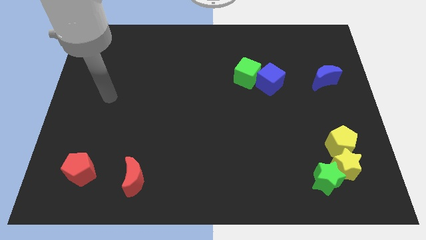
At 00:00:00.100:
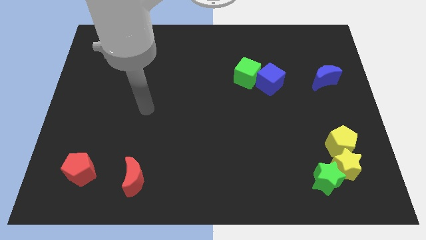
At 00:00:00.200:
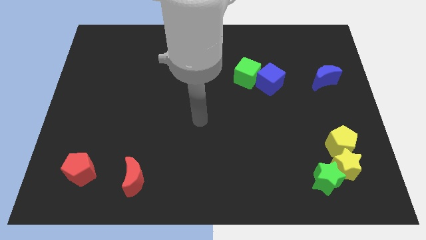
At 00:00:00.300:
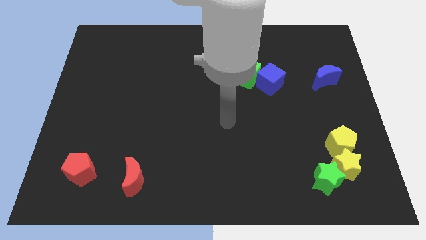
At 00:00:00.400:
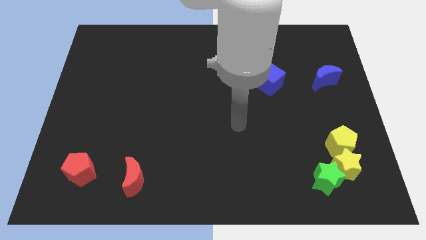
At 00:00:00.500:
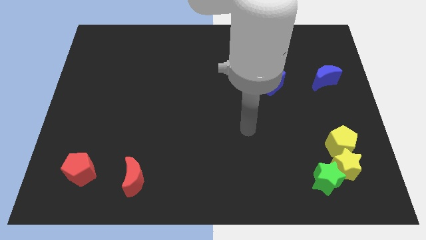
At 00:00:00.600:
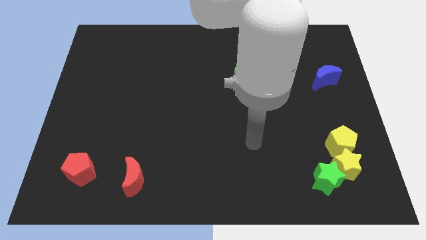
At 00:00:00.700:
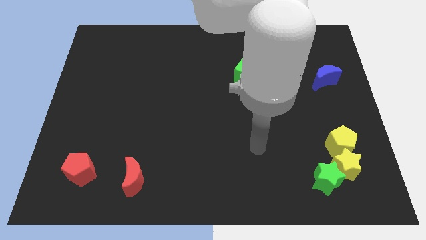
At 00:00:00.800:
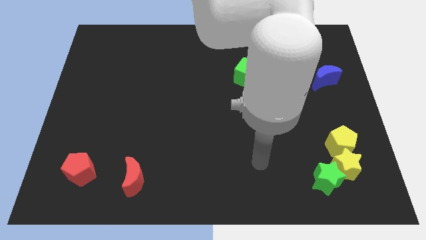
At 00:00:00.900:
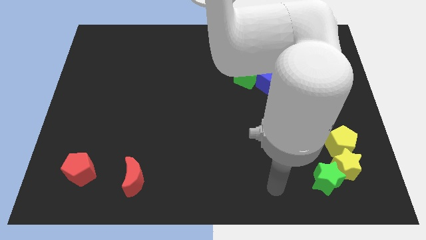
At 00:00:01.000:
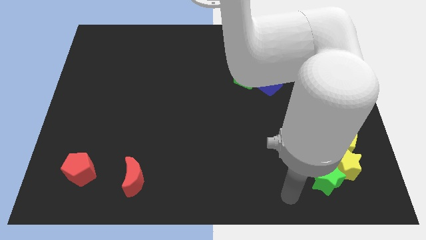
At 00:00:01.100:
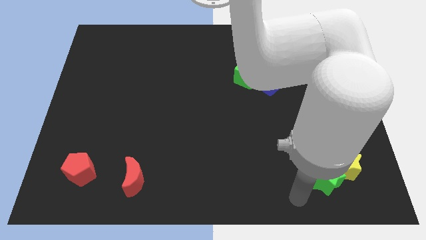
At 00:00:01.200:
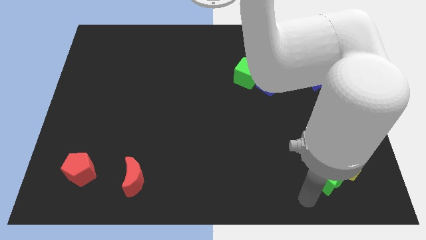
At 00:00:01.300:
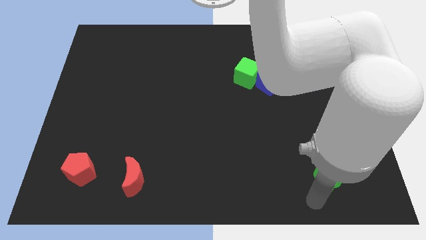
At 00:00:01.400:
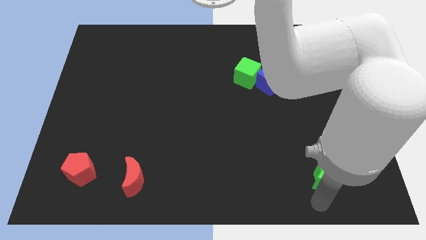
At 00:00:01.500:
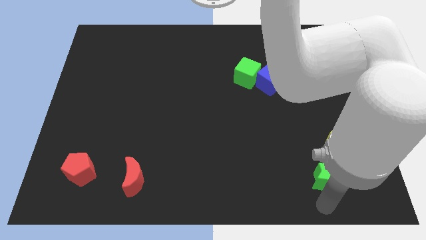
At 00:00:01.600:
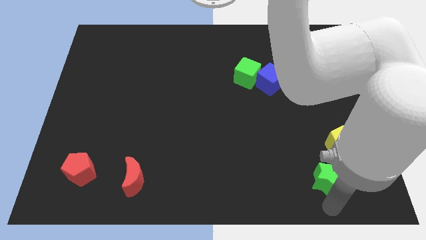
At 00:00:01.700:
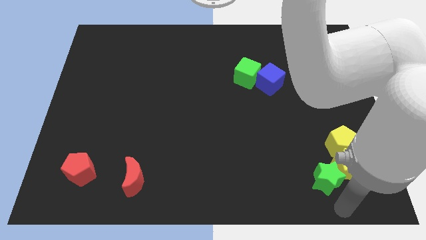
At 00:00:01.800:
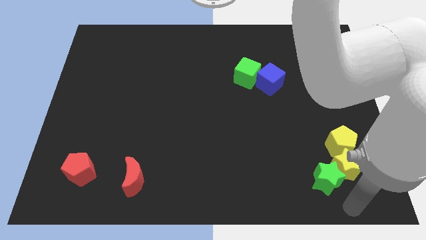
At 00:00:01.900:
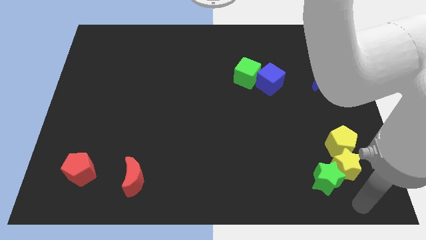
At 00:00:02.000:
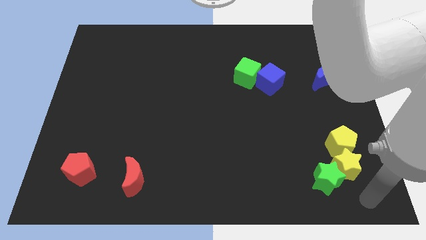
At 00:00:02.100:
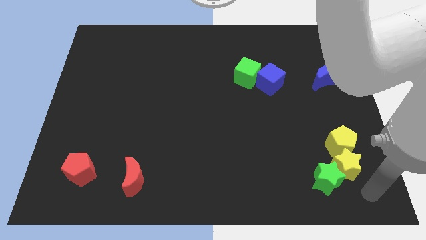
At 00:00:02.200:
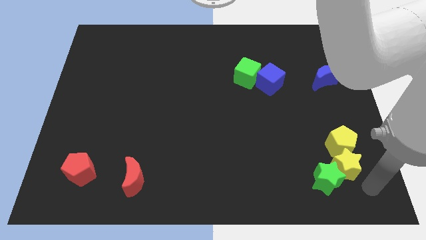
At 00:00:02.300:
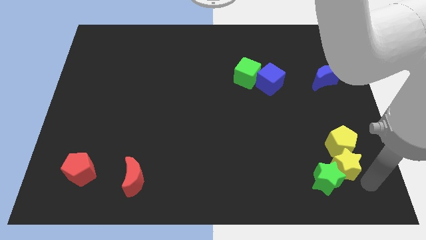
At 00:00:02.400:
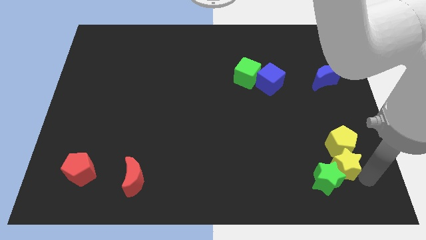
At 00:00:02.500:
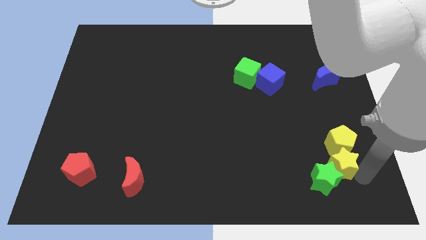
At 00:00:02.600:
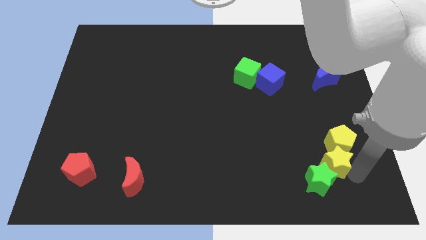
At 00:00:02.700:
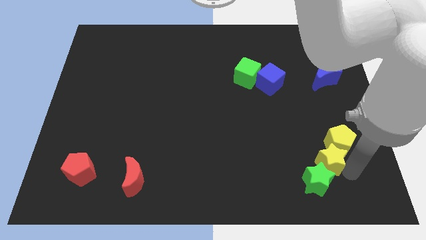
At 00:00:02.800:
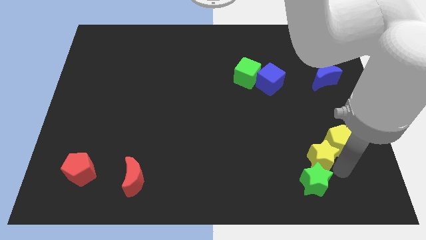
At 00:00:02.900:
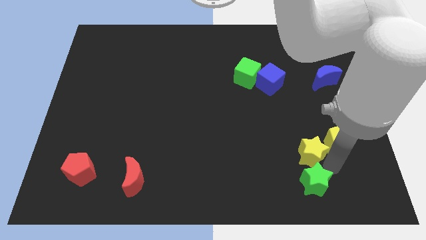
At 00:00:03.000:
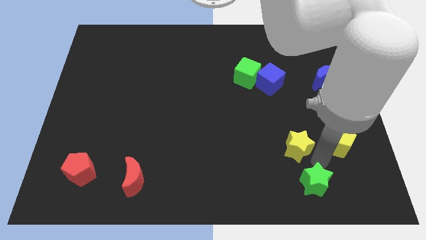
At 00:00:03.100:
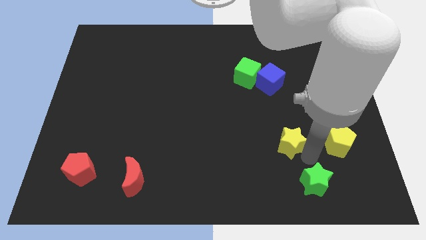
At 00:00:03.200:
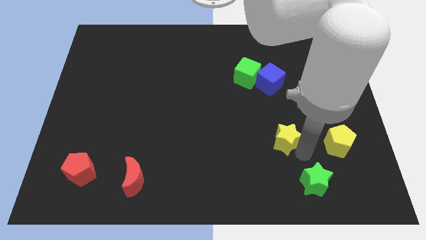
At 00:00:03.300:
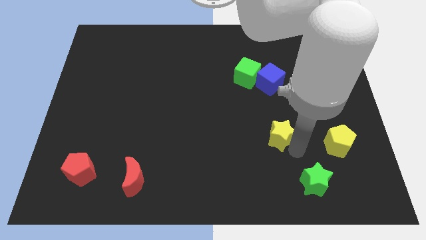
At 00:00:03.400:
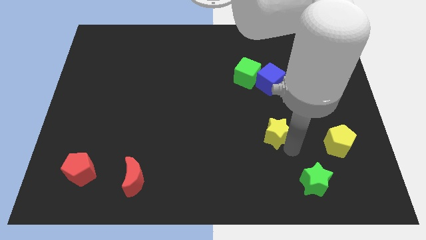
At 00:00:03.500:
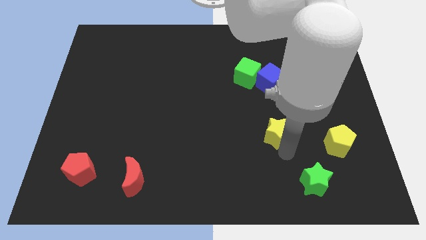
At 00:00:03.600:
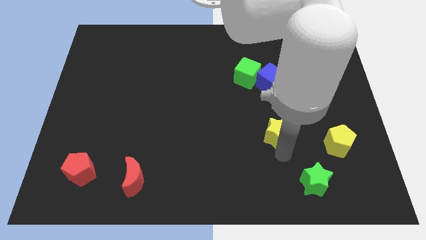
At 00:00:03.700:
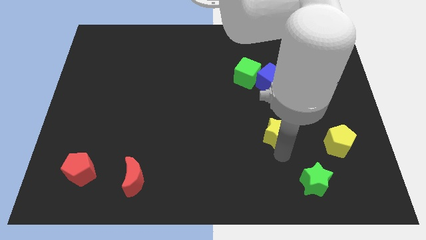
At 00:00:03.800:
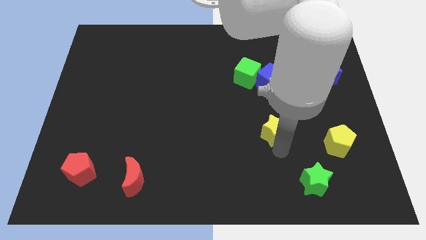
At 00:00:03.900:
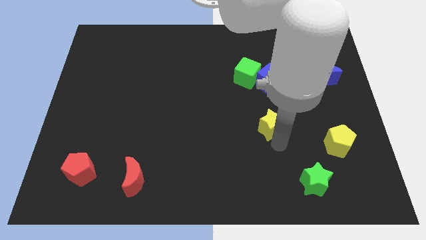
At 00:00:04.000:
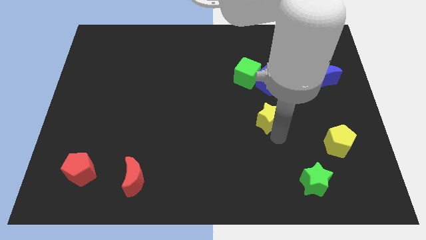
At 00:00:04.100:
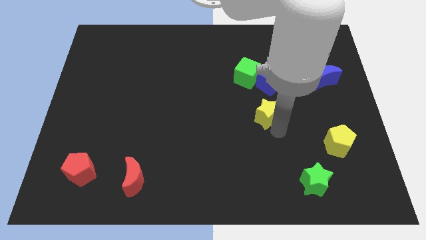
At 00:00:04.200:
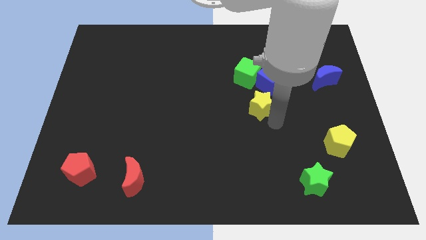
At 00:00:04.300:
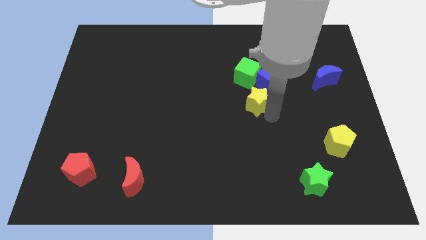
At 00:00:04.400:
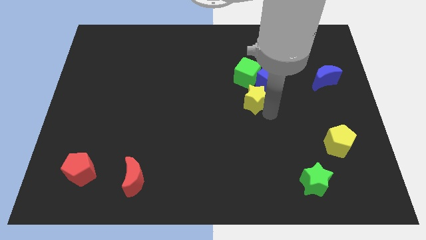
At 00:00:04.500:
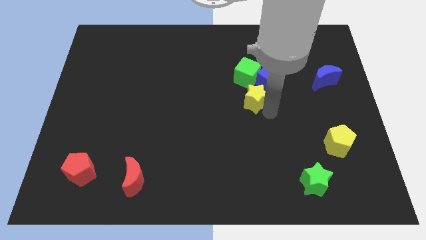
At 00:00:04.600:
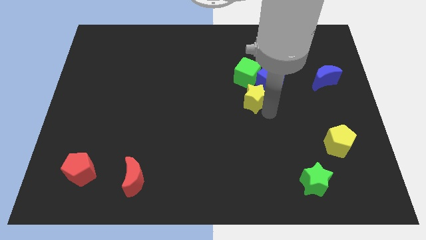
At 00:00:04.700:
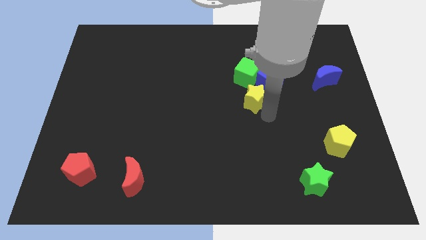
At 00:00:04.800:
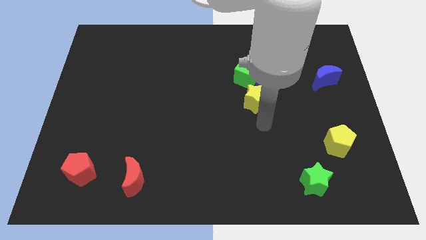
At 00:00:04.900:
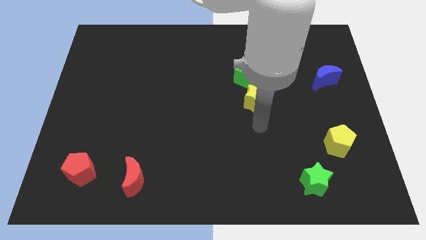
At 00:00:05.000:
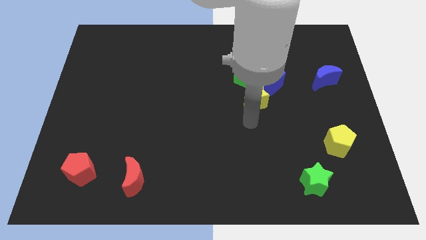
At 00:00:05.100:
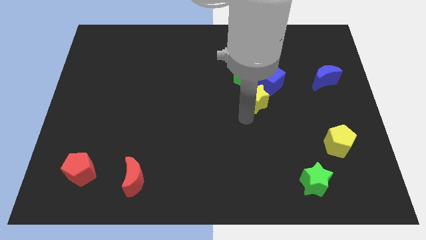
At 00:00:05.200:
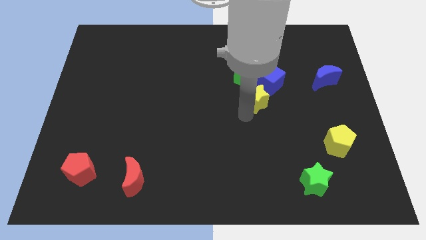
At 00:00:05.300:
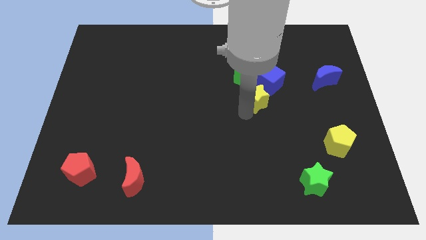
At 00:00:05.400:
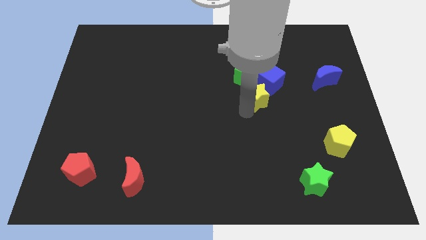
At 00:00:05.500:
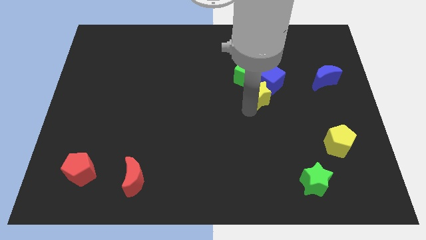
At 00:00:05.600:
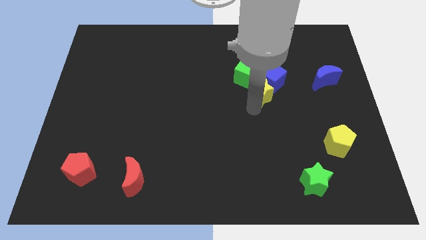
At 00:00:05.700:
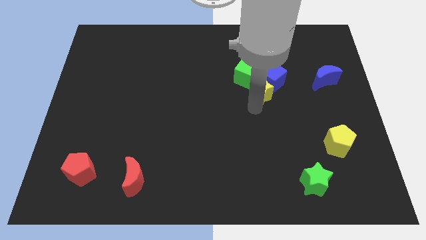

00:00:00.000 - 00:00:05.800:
put the yellow star close to the blue cube

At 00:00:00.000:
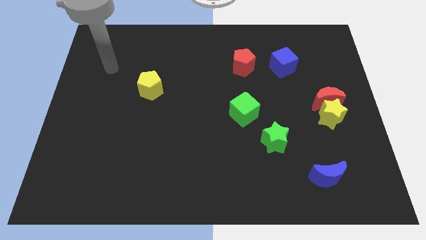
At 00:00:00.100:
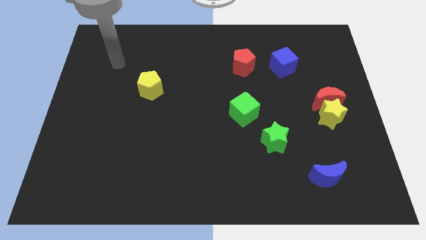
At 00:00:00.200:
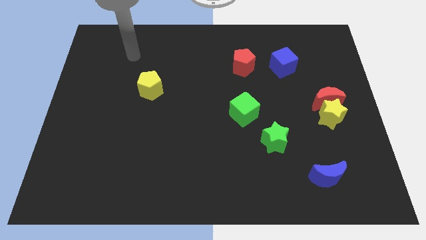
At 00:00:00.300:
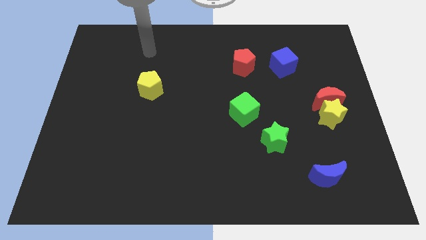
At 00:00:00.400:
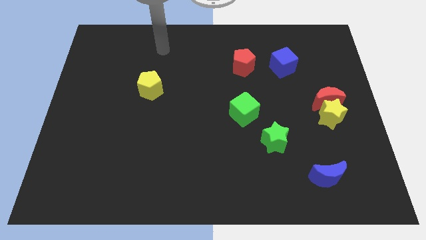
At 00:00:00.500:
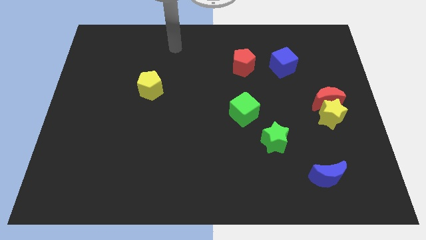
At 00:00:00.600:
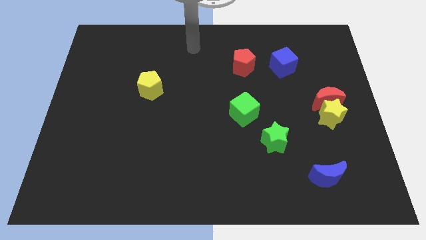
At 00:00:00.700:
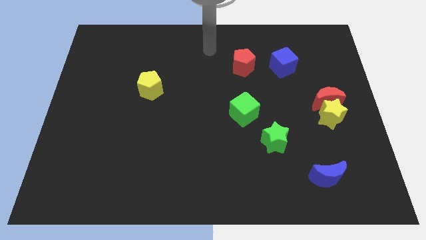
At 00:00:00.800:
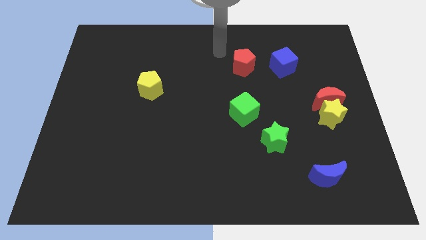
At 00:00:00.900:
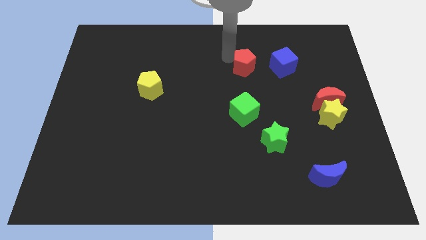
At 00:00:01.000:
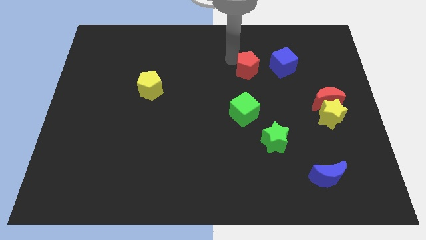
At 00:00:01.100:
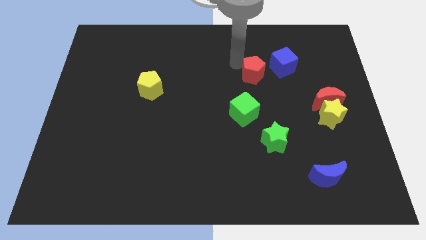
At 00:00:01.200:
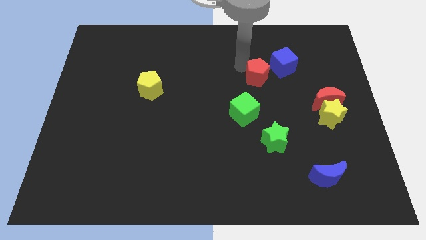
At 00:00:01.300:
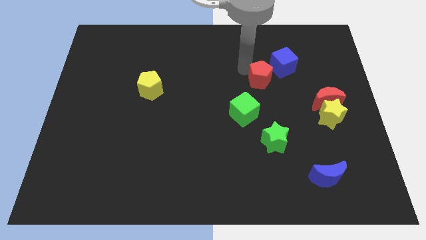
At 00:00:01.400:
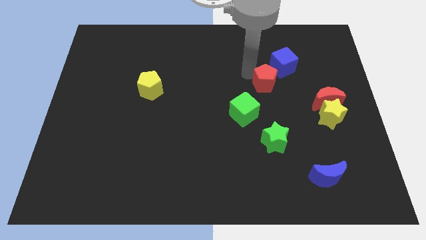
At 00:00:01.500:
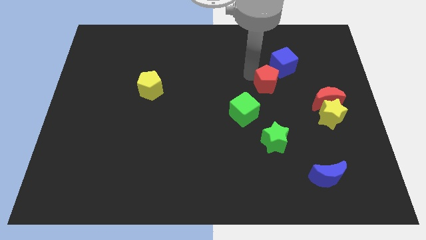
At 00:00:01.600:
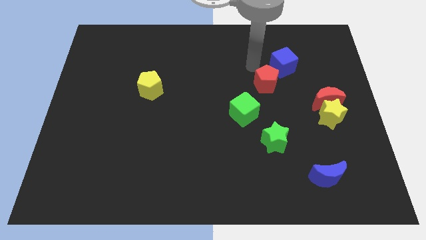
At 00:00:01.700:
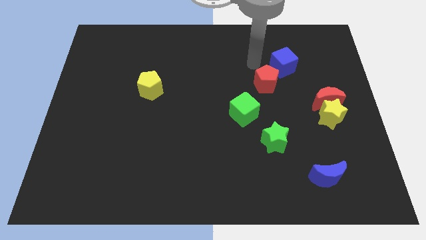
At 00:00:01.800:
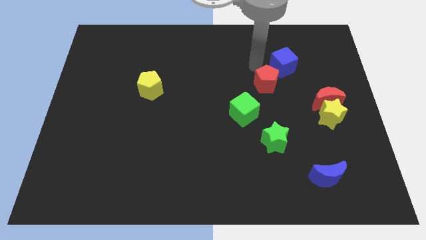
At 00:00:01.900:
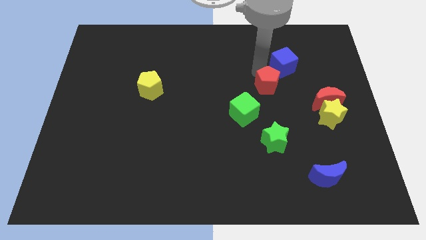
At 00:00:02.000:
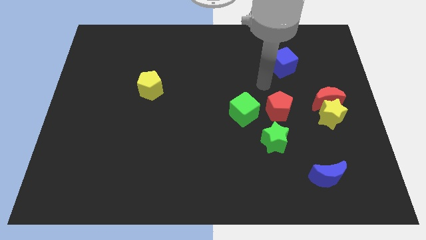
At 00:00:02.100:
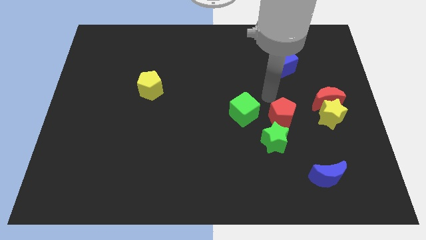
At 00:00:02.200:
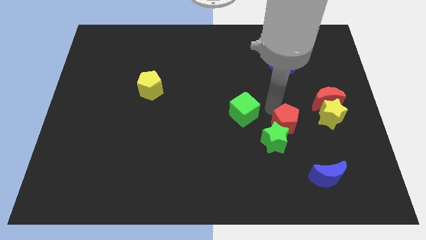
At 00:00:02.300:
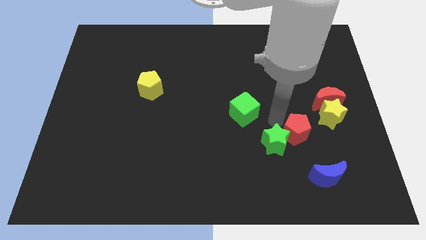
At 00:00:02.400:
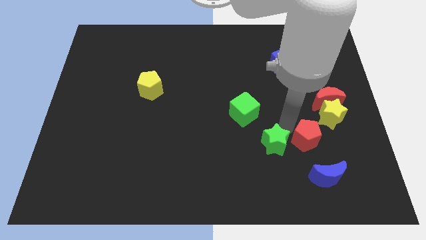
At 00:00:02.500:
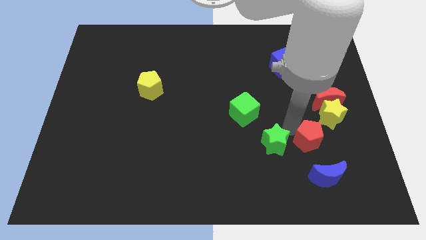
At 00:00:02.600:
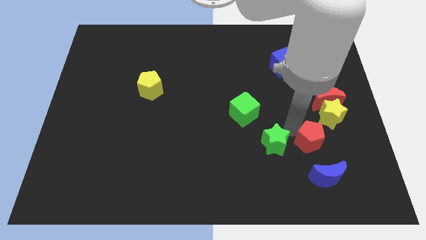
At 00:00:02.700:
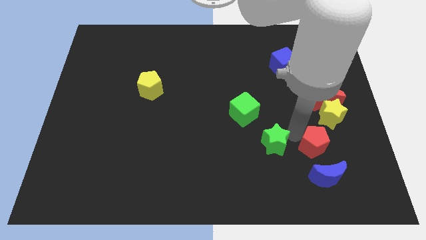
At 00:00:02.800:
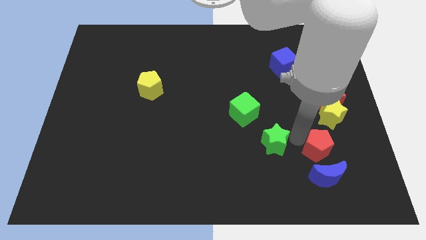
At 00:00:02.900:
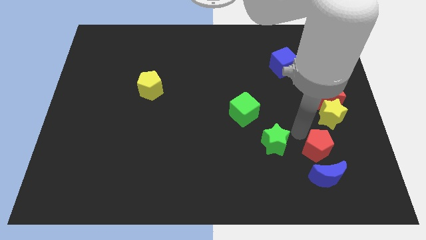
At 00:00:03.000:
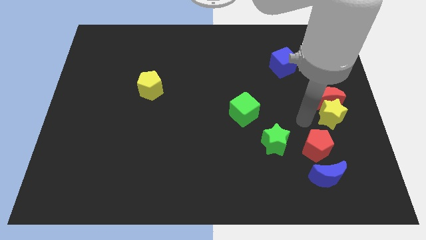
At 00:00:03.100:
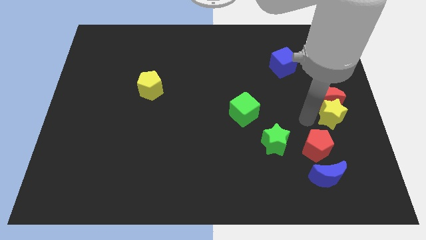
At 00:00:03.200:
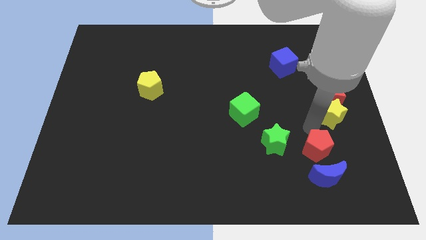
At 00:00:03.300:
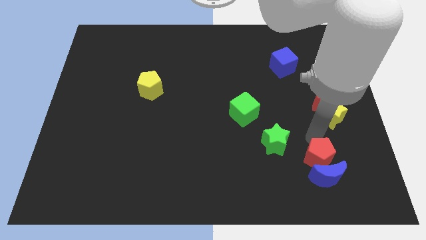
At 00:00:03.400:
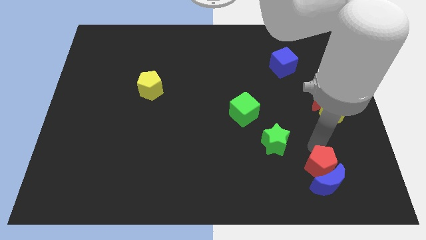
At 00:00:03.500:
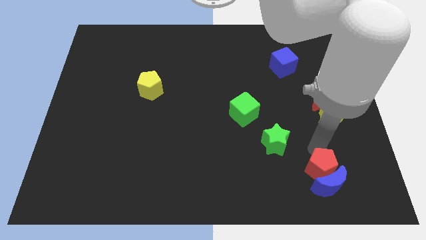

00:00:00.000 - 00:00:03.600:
move the red pentagon towards the blue moon
